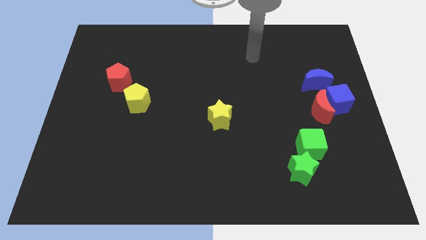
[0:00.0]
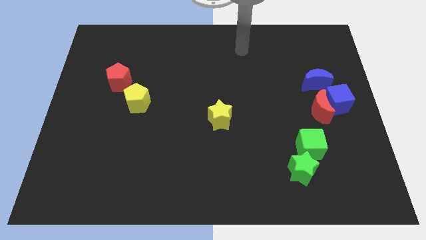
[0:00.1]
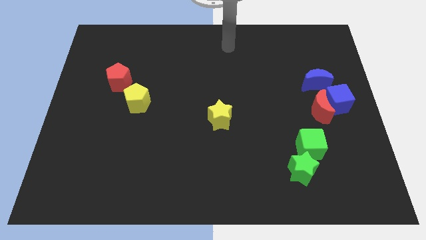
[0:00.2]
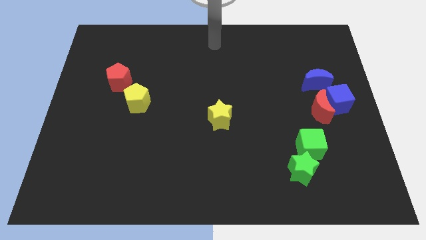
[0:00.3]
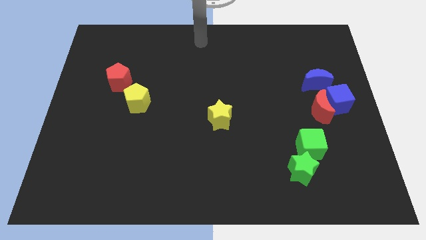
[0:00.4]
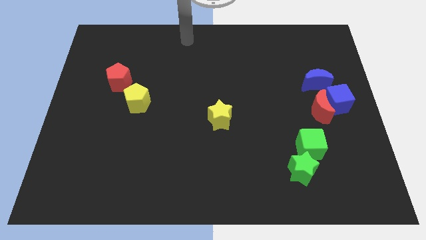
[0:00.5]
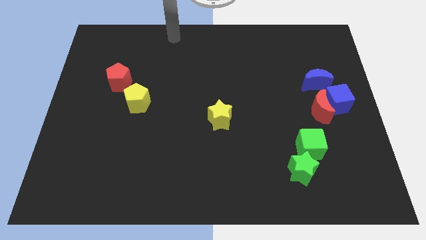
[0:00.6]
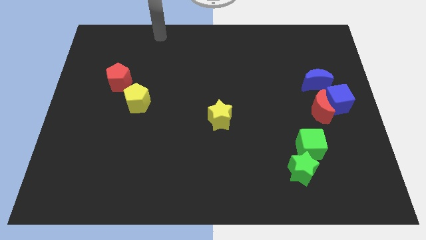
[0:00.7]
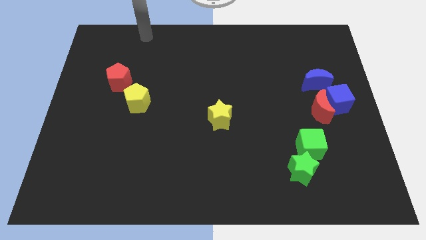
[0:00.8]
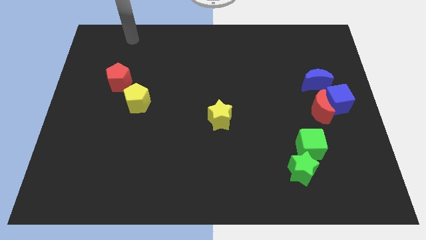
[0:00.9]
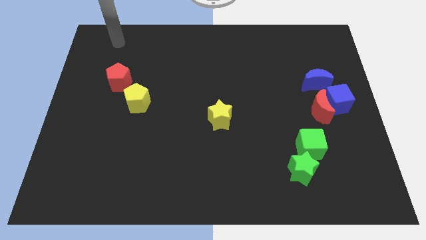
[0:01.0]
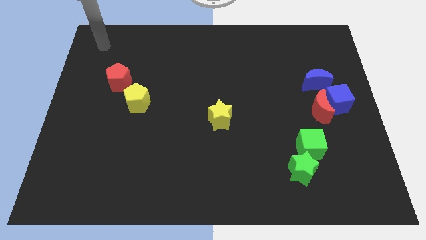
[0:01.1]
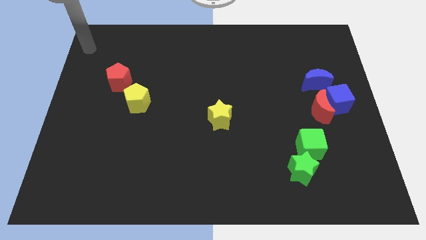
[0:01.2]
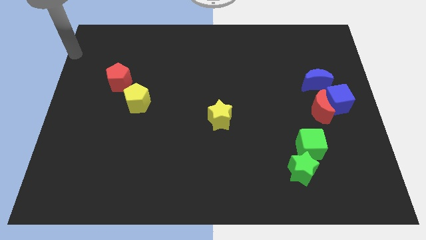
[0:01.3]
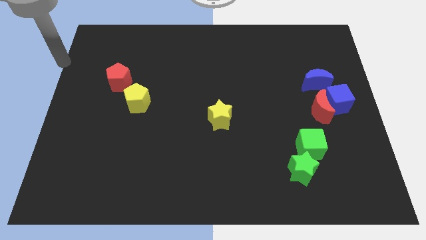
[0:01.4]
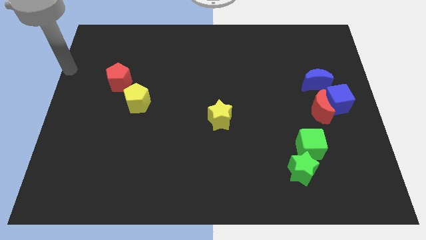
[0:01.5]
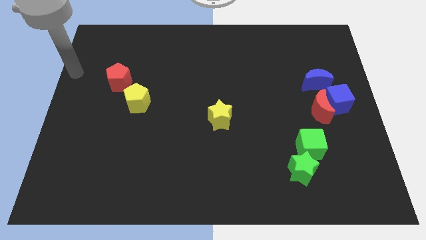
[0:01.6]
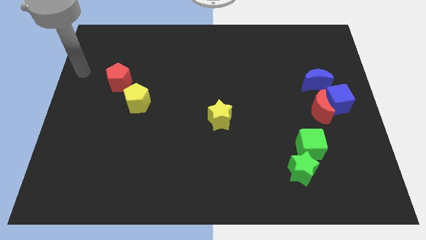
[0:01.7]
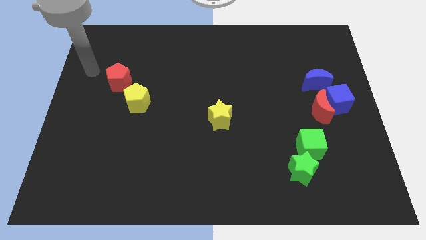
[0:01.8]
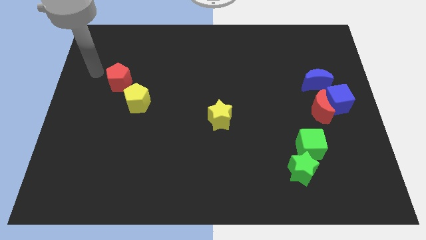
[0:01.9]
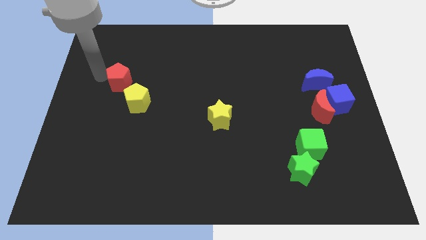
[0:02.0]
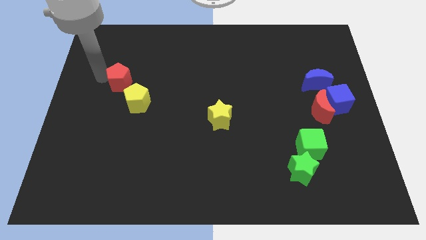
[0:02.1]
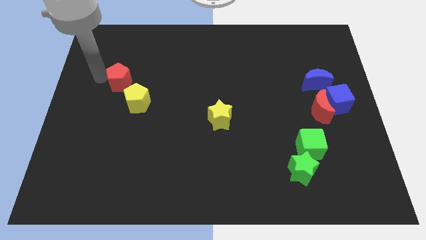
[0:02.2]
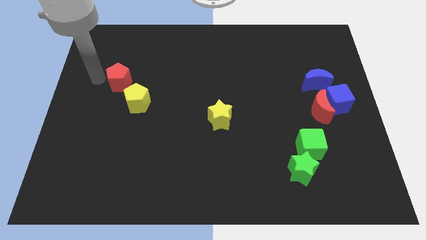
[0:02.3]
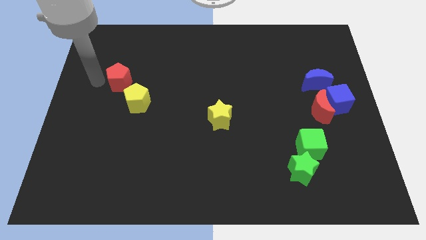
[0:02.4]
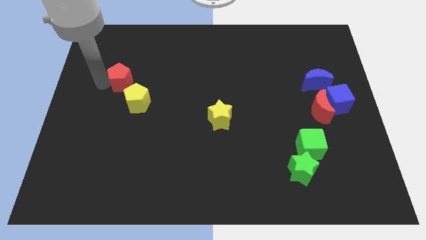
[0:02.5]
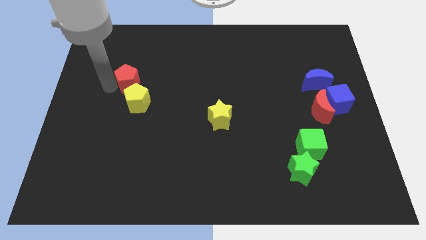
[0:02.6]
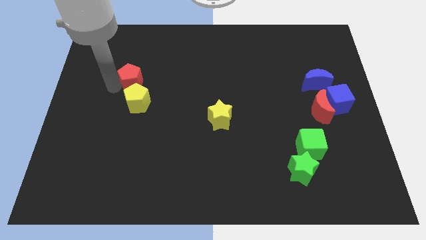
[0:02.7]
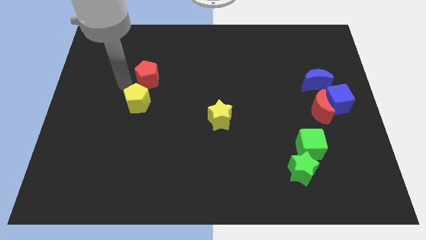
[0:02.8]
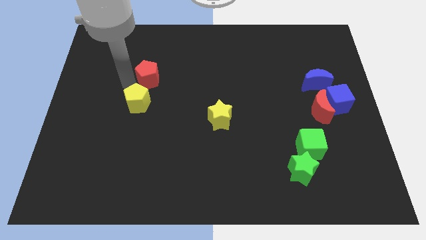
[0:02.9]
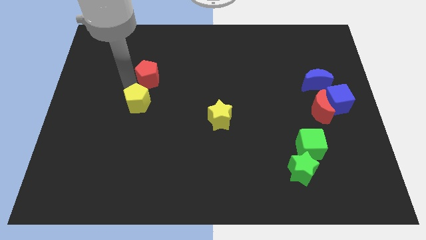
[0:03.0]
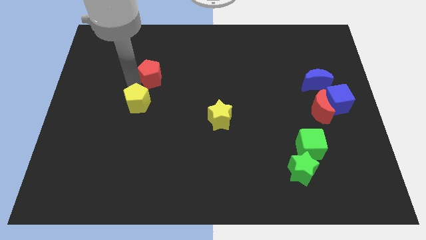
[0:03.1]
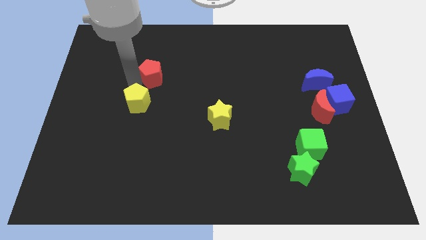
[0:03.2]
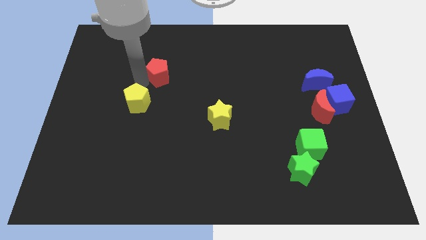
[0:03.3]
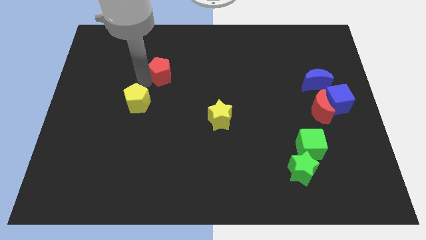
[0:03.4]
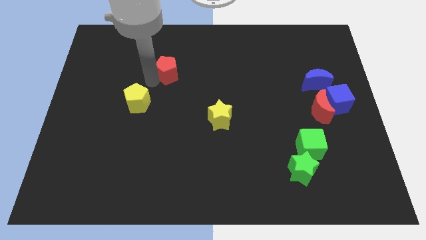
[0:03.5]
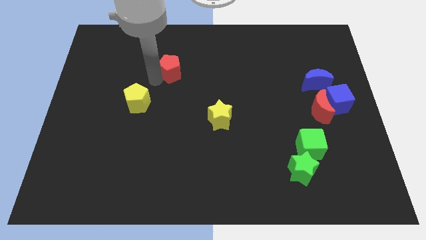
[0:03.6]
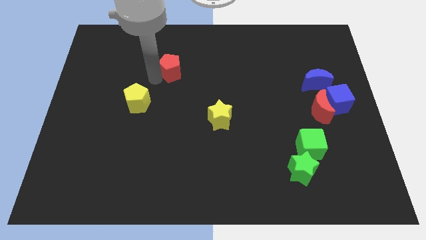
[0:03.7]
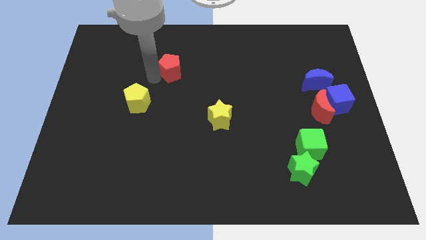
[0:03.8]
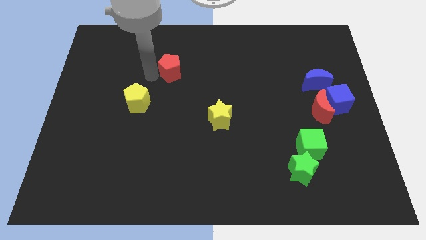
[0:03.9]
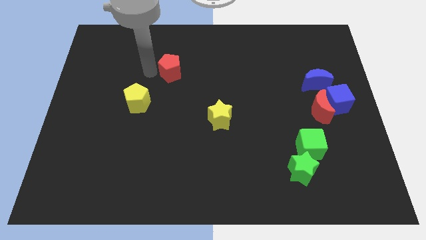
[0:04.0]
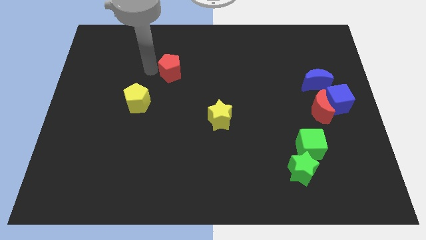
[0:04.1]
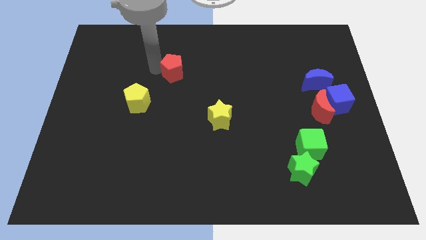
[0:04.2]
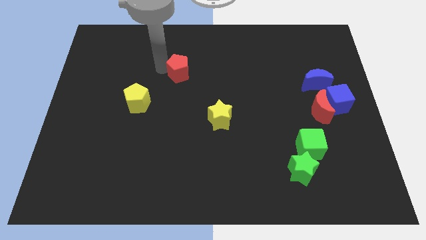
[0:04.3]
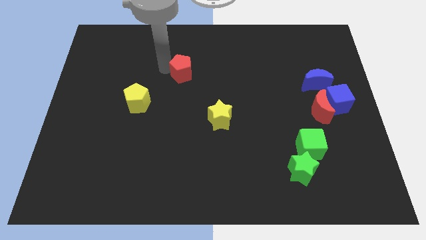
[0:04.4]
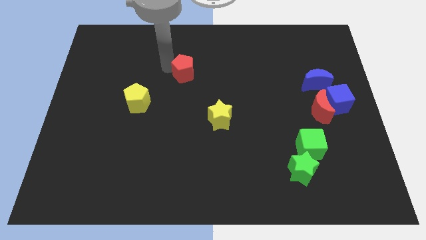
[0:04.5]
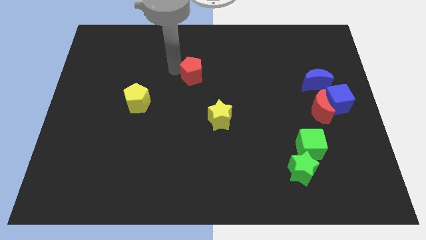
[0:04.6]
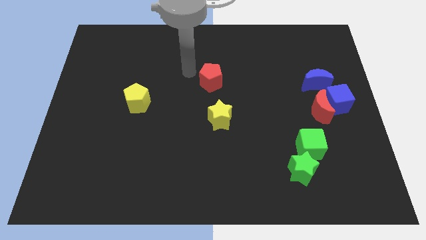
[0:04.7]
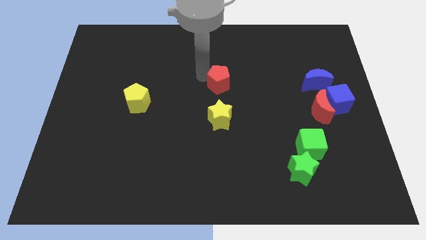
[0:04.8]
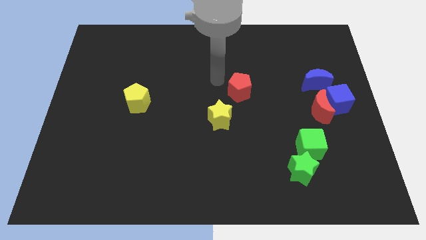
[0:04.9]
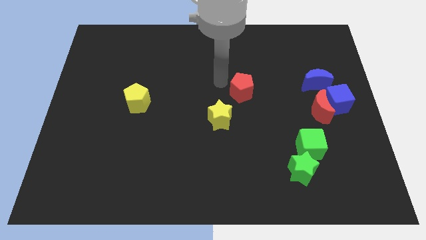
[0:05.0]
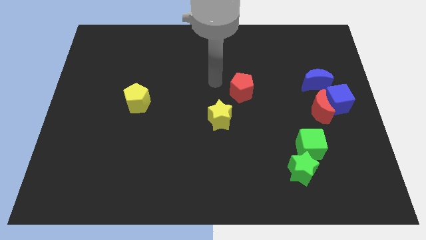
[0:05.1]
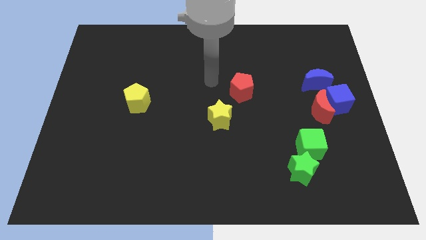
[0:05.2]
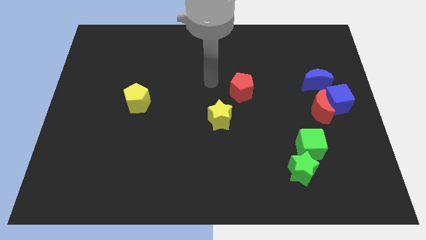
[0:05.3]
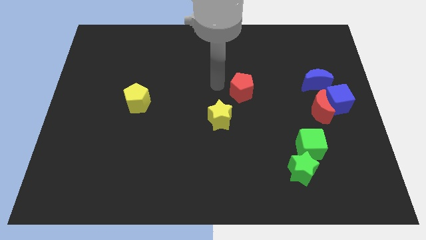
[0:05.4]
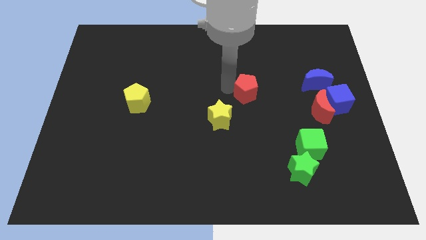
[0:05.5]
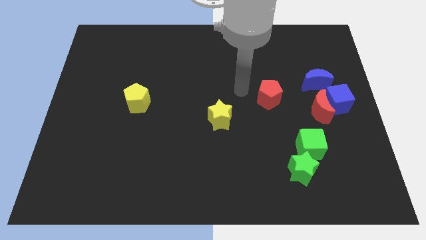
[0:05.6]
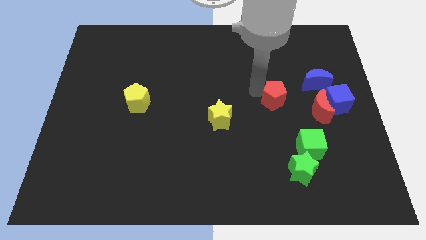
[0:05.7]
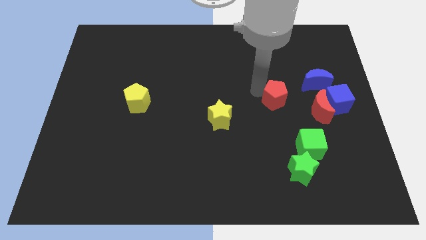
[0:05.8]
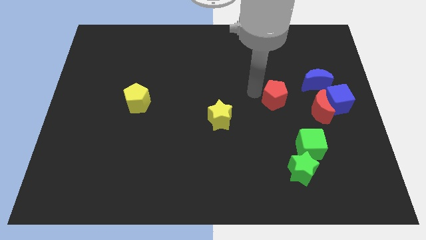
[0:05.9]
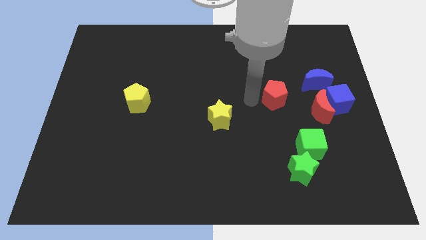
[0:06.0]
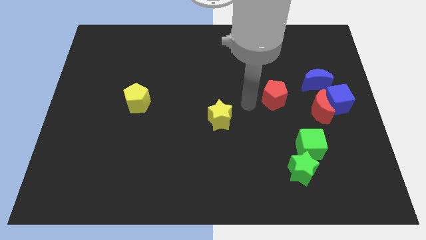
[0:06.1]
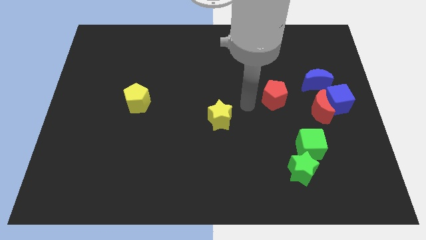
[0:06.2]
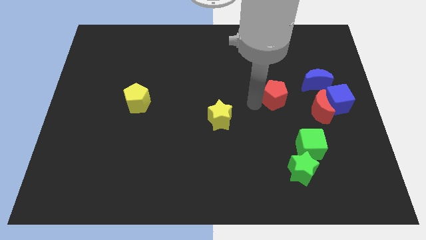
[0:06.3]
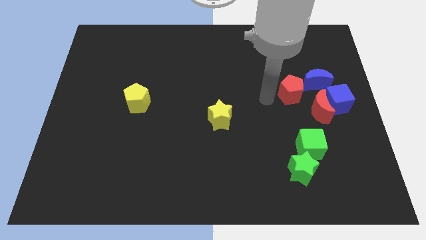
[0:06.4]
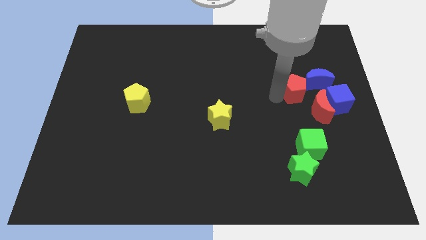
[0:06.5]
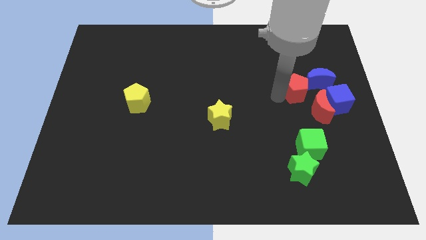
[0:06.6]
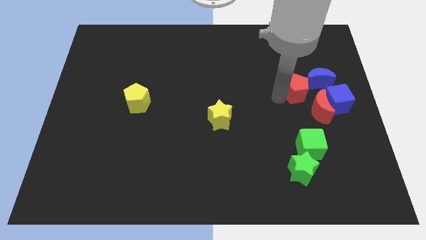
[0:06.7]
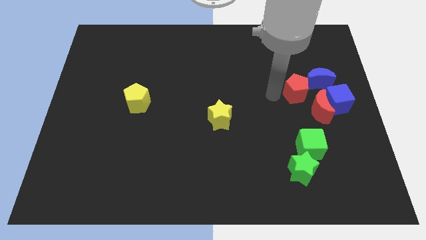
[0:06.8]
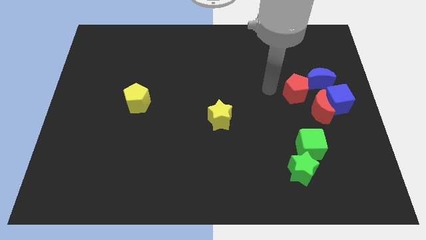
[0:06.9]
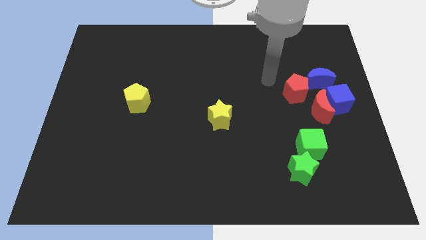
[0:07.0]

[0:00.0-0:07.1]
push the red pentagon into the blue crescent

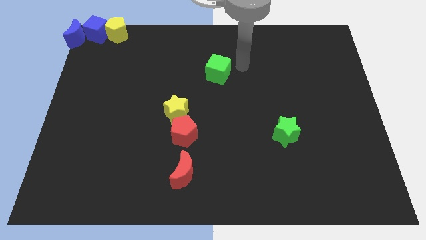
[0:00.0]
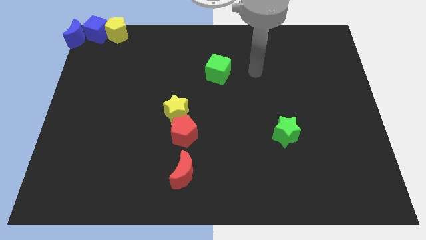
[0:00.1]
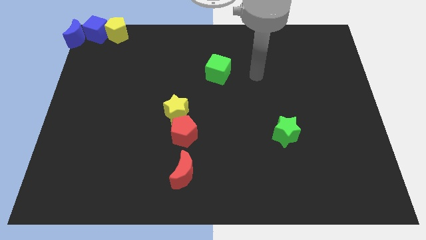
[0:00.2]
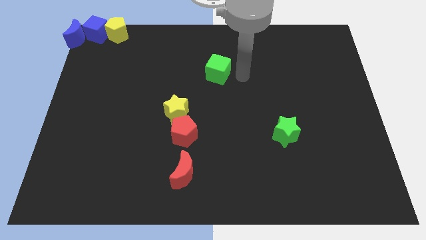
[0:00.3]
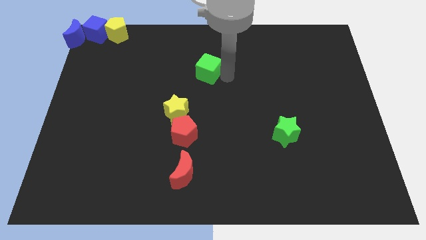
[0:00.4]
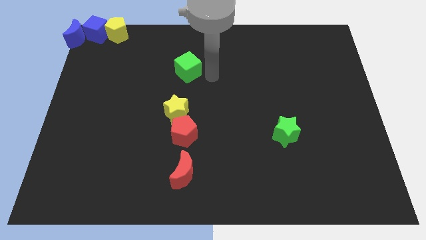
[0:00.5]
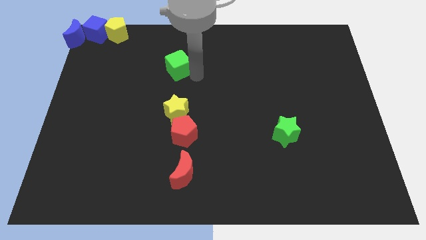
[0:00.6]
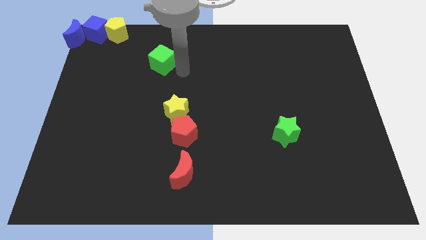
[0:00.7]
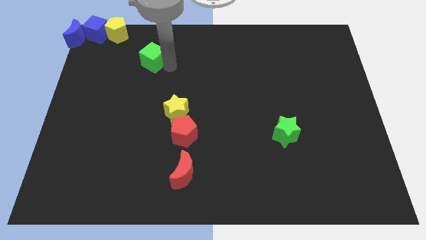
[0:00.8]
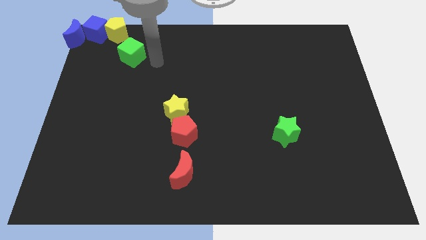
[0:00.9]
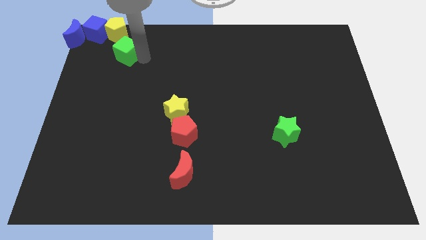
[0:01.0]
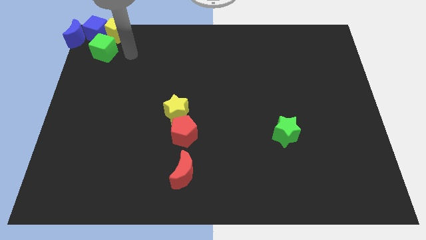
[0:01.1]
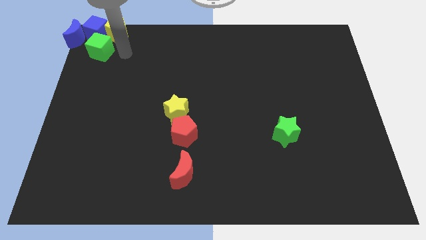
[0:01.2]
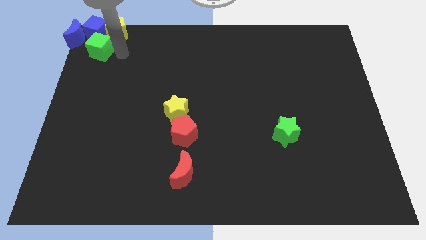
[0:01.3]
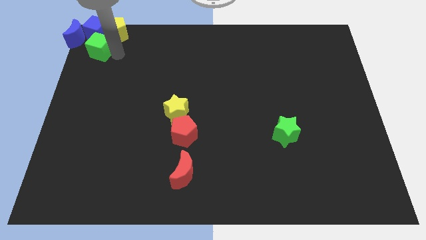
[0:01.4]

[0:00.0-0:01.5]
push the green cube at the bottom of the blue cube

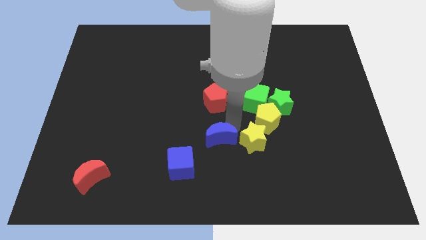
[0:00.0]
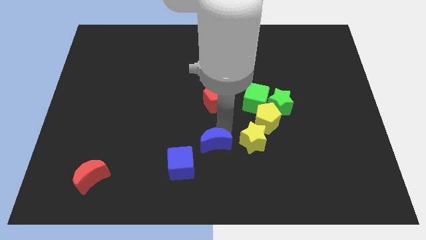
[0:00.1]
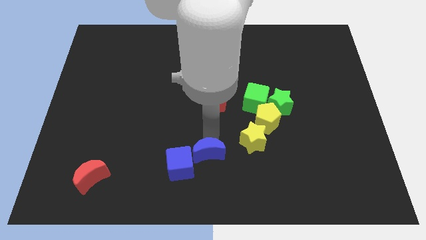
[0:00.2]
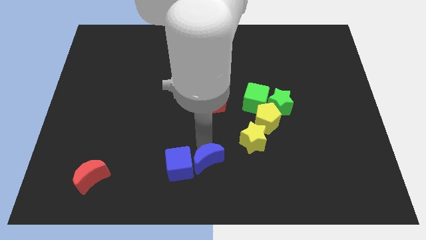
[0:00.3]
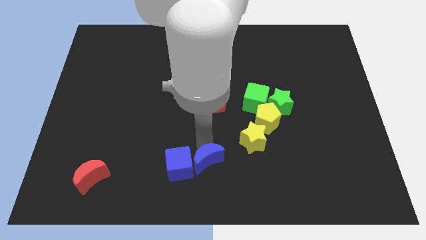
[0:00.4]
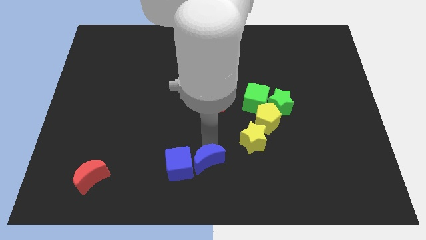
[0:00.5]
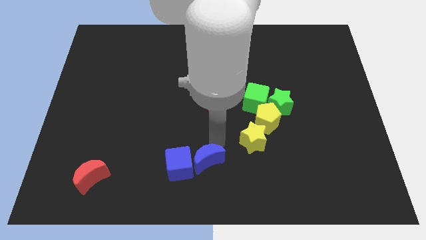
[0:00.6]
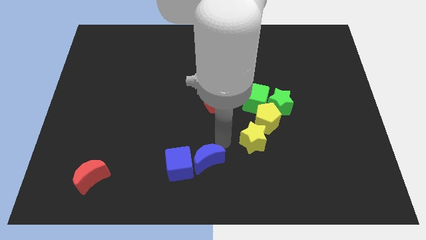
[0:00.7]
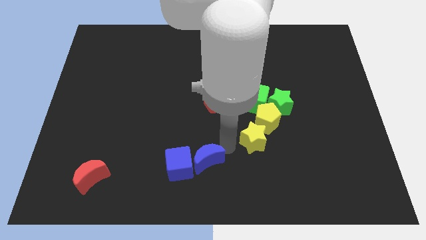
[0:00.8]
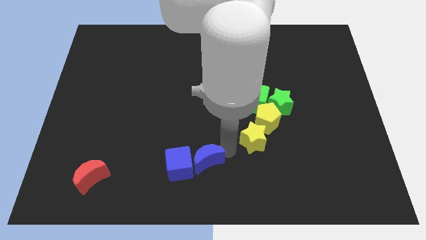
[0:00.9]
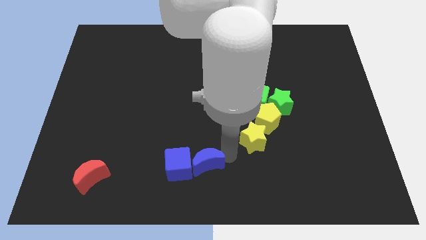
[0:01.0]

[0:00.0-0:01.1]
bring the blue crescent into the right side of the blue cube
